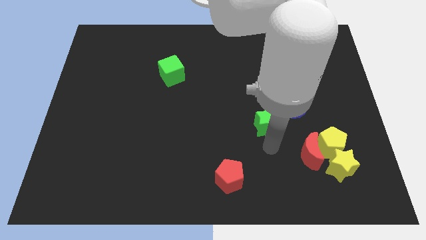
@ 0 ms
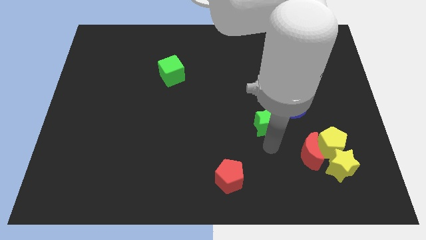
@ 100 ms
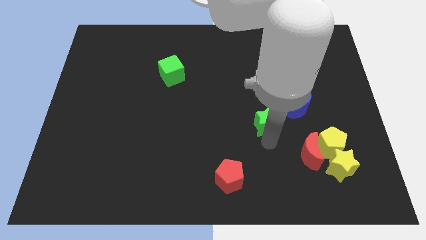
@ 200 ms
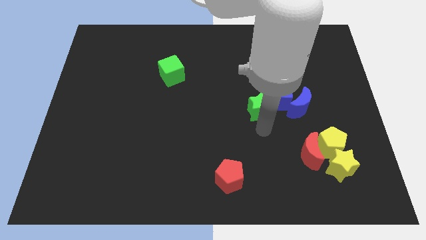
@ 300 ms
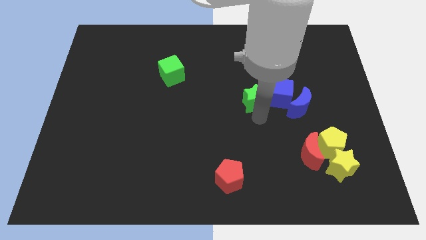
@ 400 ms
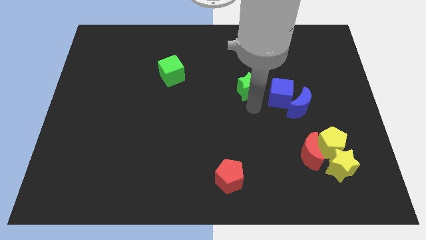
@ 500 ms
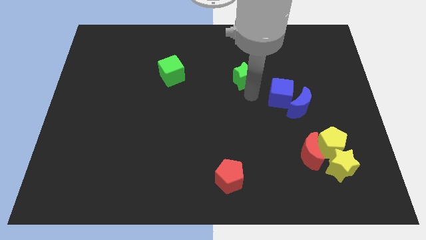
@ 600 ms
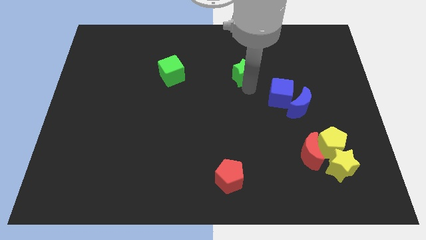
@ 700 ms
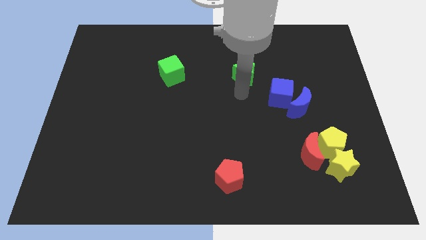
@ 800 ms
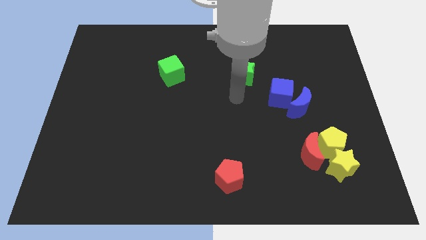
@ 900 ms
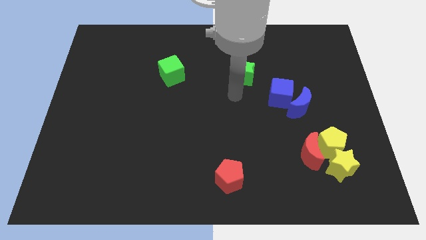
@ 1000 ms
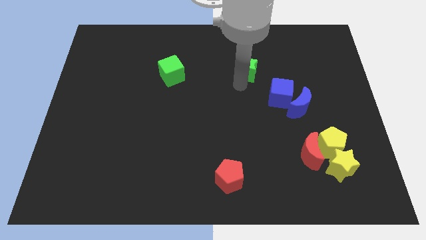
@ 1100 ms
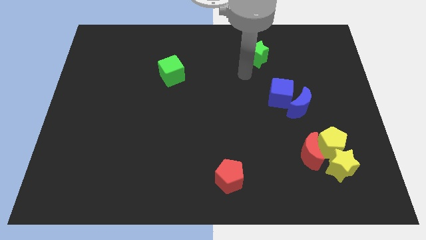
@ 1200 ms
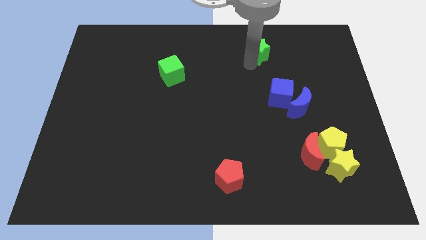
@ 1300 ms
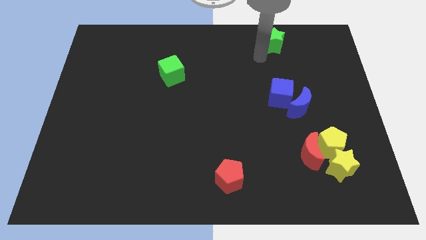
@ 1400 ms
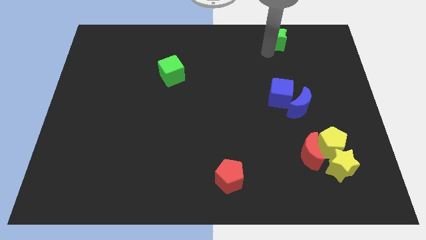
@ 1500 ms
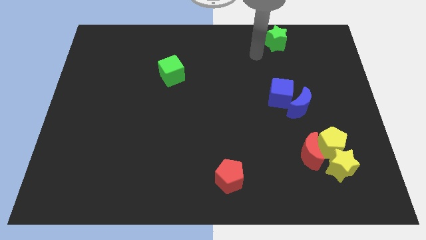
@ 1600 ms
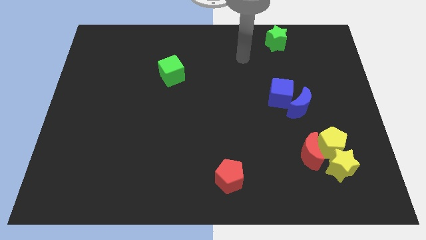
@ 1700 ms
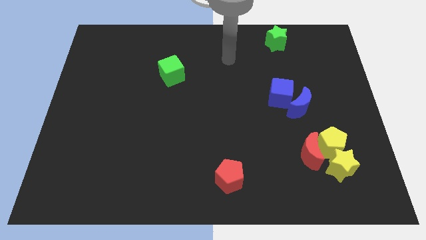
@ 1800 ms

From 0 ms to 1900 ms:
place the green cube vertically above the blue cube

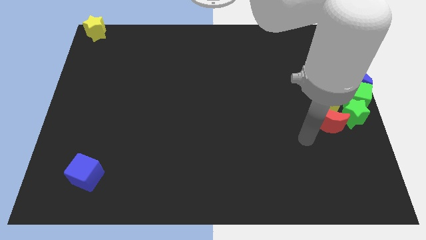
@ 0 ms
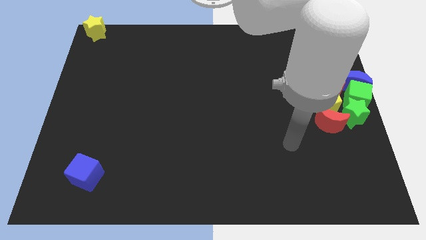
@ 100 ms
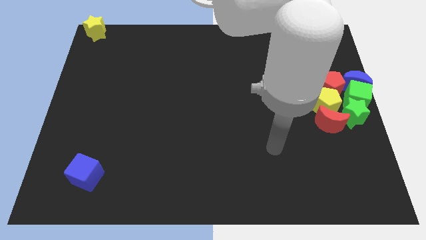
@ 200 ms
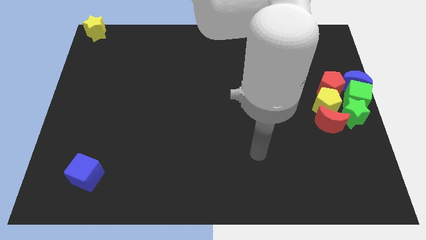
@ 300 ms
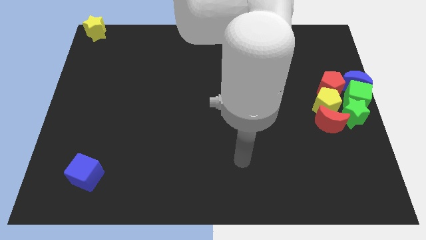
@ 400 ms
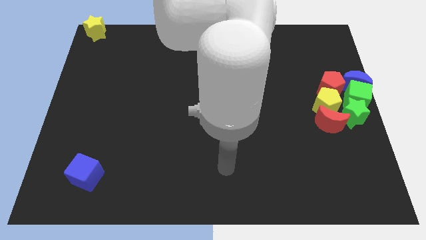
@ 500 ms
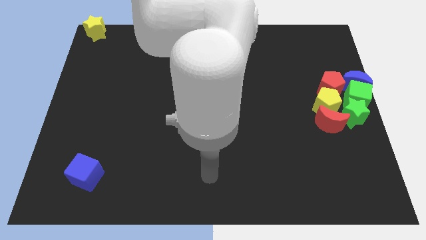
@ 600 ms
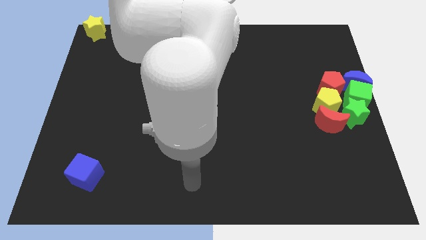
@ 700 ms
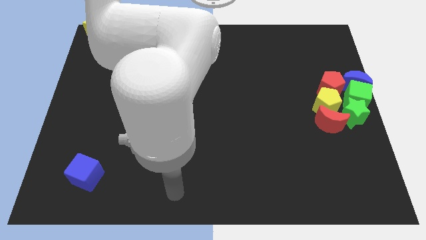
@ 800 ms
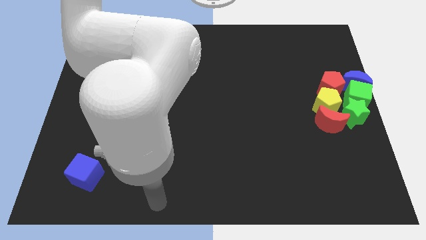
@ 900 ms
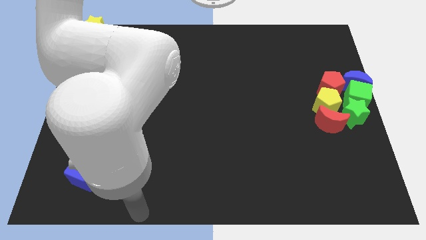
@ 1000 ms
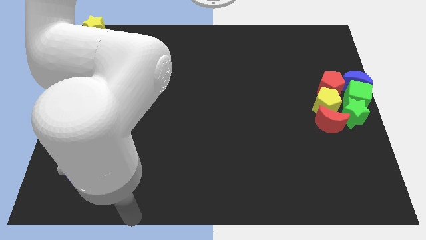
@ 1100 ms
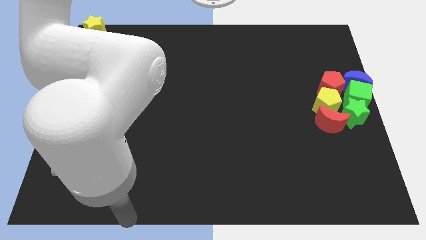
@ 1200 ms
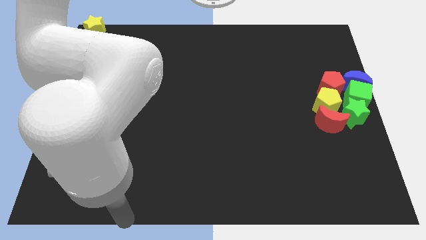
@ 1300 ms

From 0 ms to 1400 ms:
move the arm towards the bottom side of the board

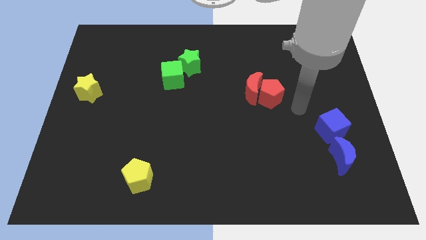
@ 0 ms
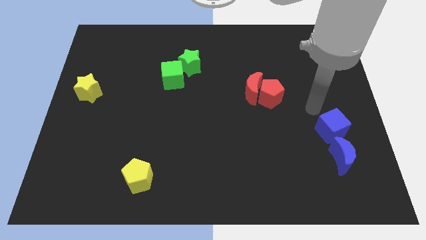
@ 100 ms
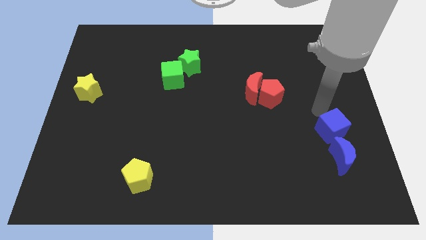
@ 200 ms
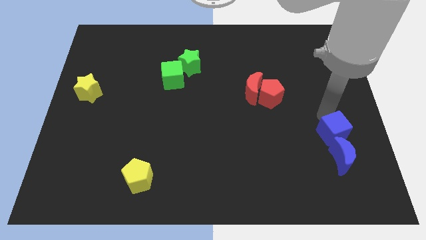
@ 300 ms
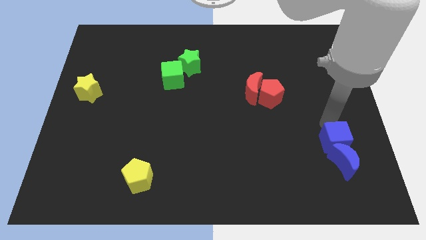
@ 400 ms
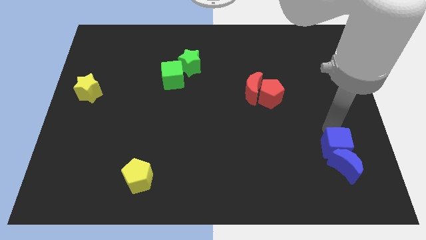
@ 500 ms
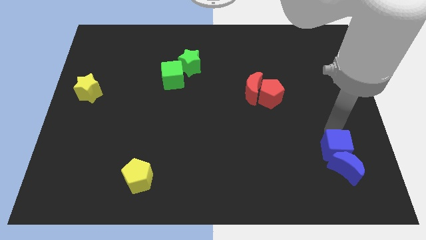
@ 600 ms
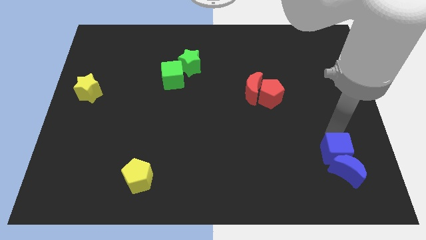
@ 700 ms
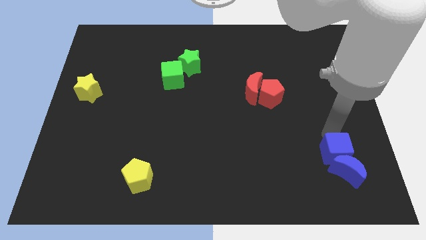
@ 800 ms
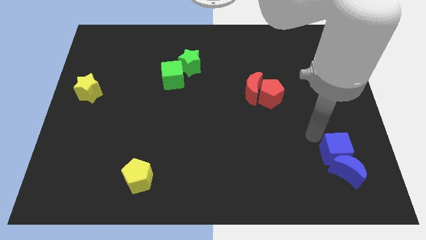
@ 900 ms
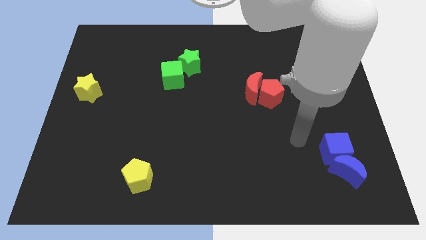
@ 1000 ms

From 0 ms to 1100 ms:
push the blue blocks slightly to the bottom

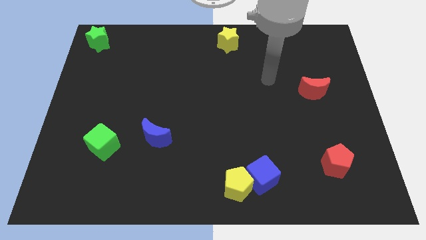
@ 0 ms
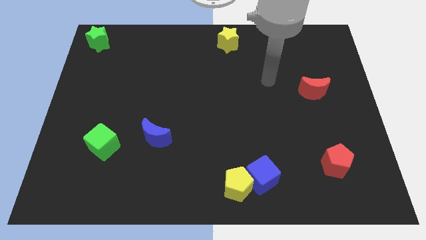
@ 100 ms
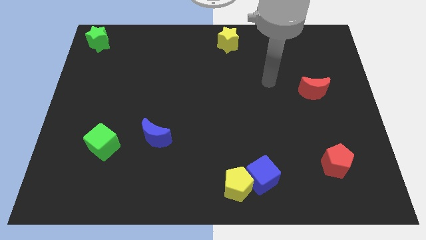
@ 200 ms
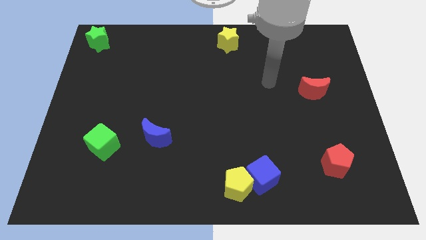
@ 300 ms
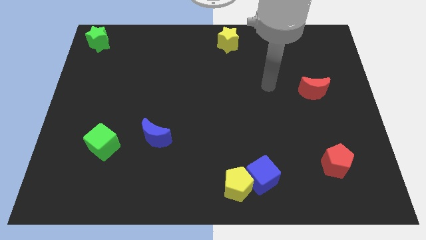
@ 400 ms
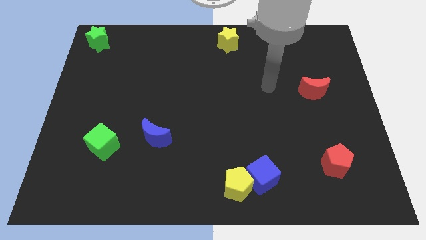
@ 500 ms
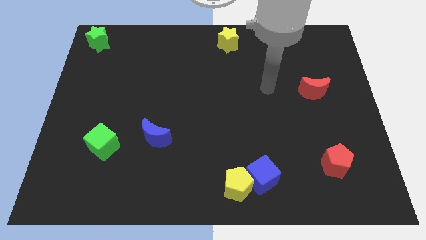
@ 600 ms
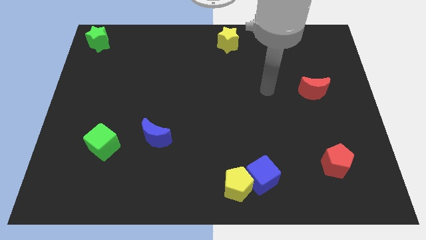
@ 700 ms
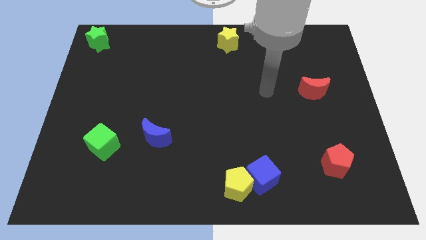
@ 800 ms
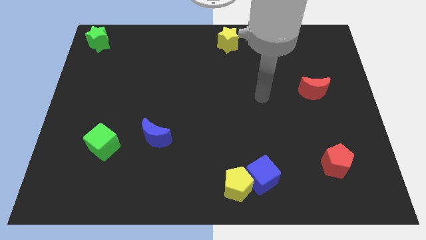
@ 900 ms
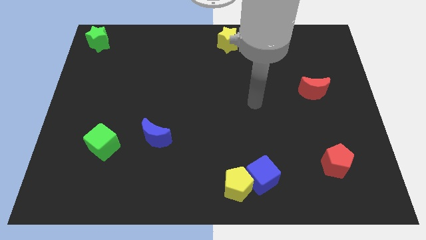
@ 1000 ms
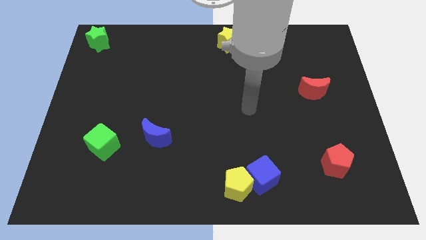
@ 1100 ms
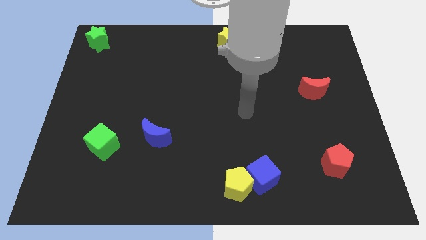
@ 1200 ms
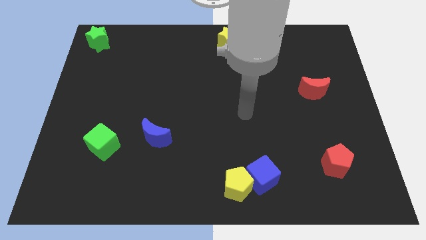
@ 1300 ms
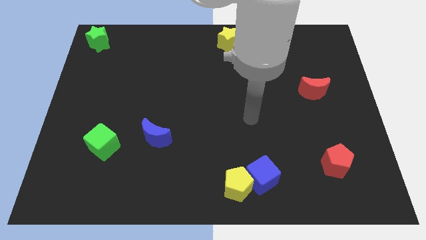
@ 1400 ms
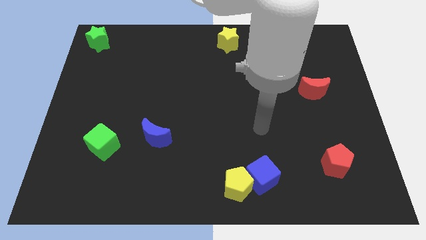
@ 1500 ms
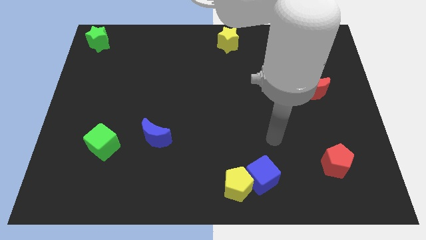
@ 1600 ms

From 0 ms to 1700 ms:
slide your arm away from yellow star

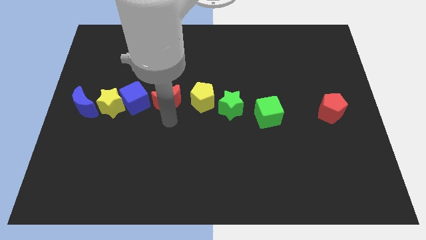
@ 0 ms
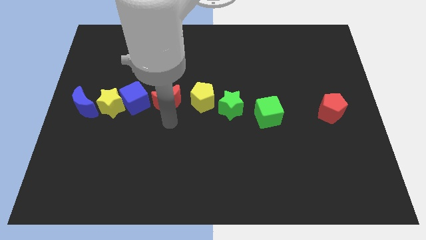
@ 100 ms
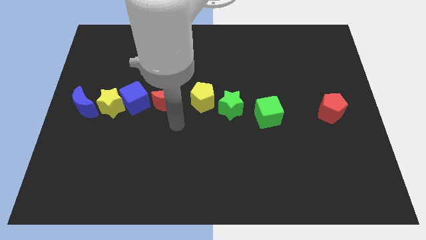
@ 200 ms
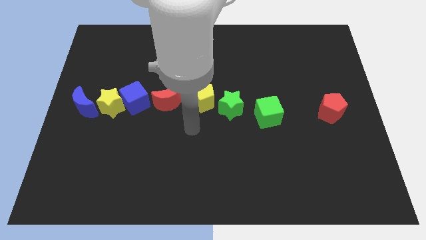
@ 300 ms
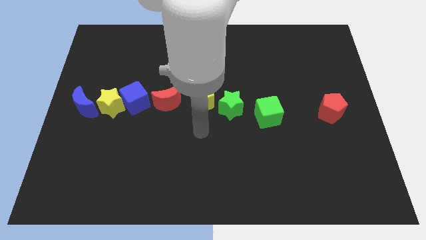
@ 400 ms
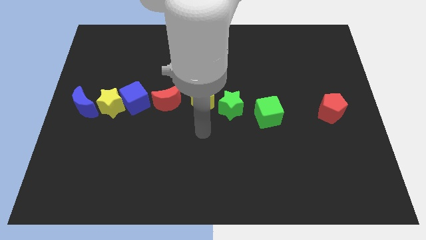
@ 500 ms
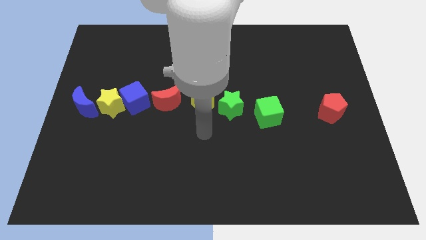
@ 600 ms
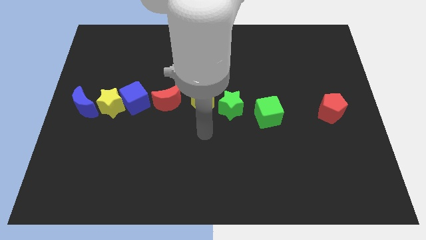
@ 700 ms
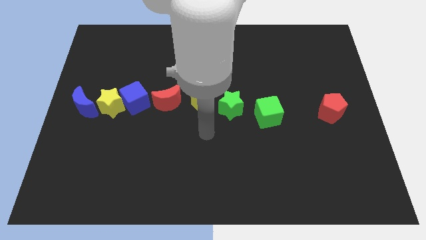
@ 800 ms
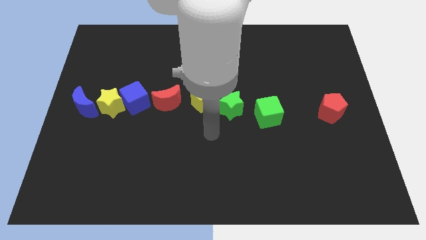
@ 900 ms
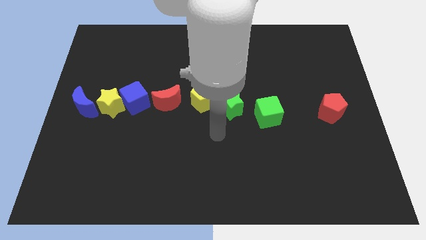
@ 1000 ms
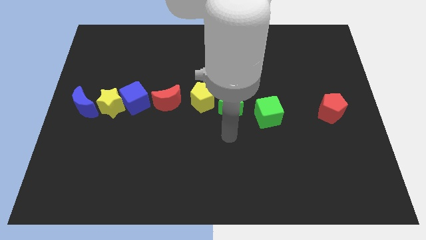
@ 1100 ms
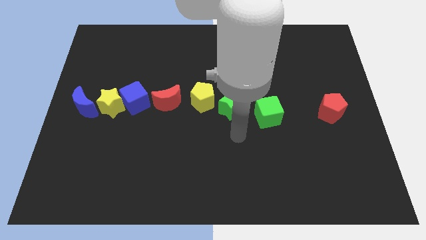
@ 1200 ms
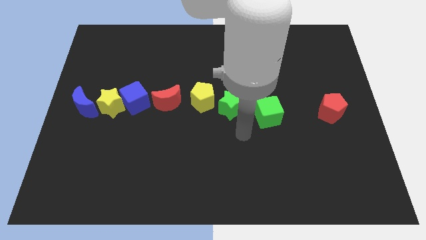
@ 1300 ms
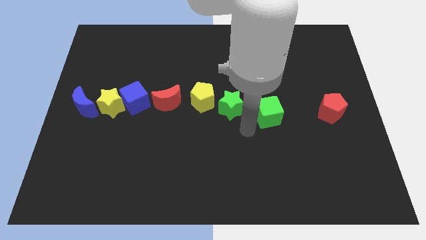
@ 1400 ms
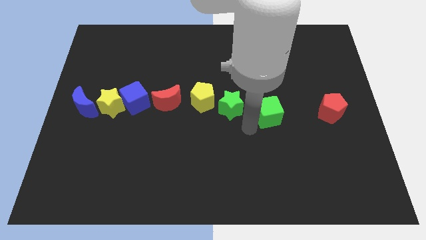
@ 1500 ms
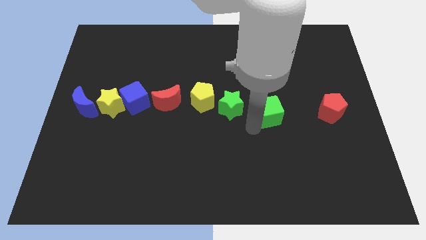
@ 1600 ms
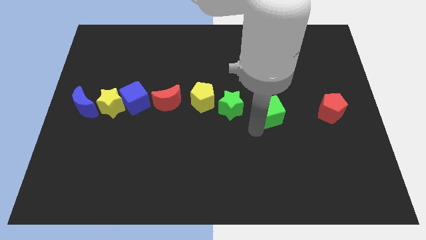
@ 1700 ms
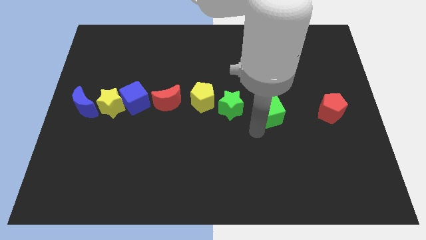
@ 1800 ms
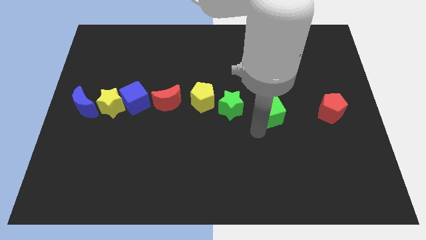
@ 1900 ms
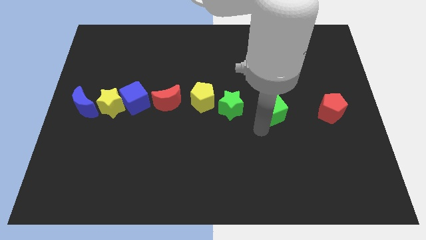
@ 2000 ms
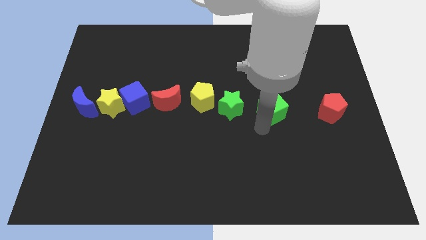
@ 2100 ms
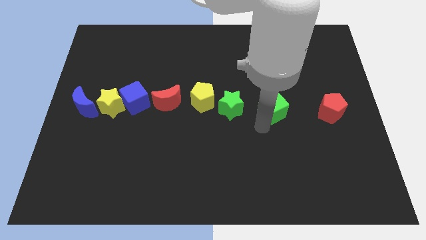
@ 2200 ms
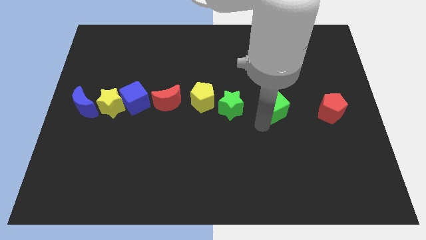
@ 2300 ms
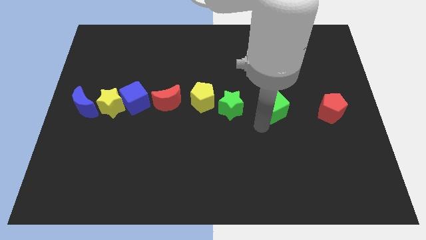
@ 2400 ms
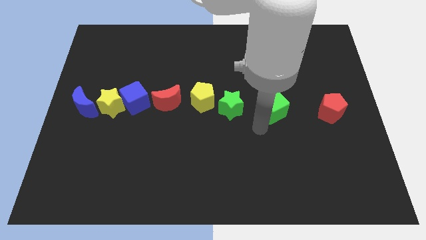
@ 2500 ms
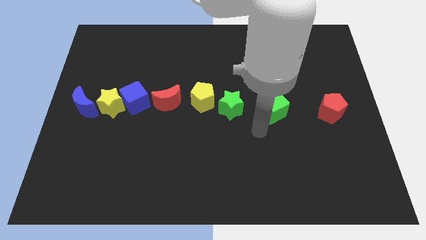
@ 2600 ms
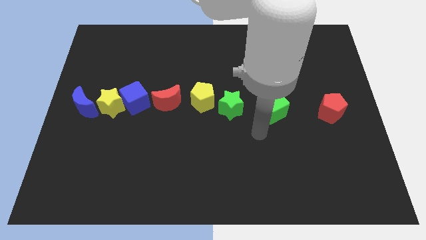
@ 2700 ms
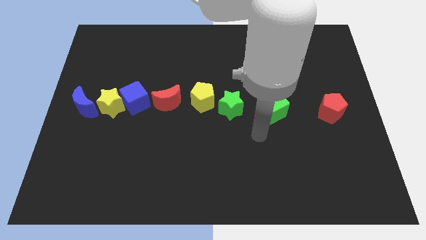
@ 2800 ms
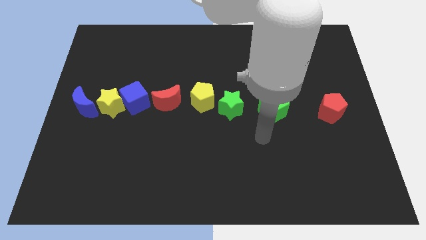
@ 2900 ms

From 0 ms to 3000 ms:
push the green cube slightly to the top of the board
